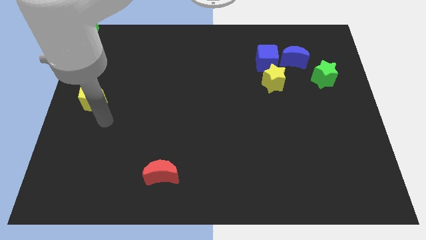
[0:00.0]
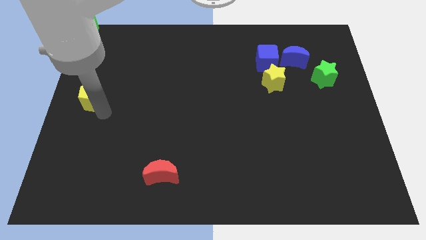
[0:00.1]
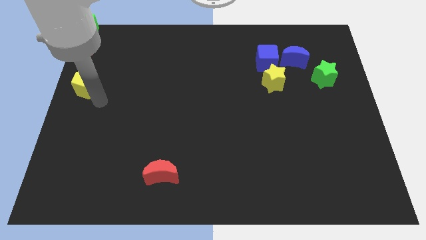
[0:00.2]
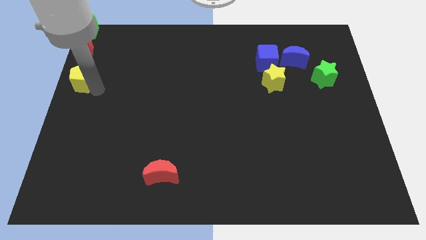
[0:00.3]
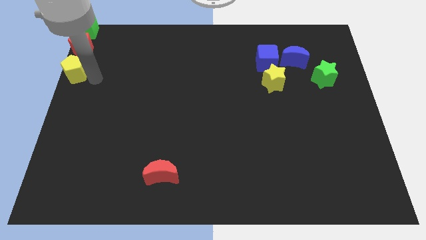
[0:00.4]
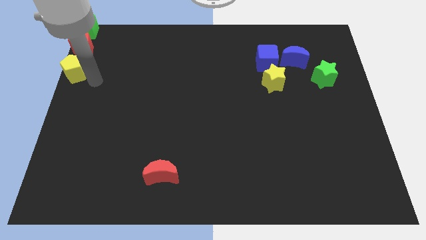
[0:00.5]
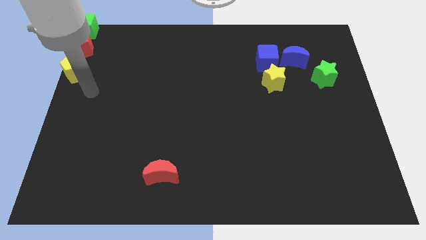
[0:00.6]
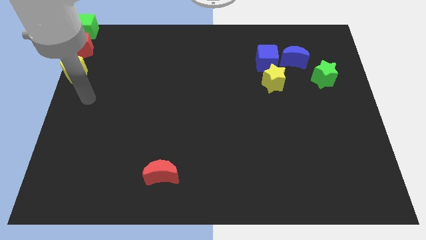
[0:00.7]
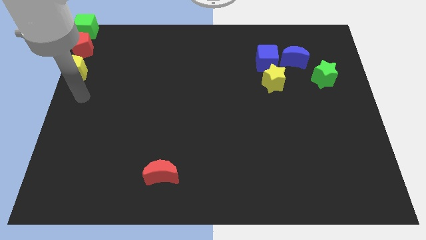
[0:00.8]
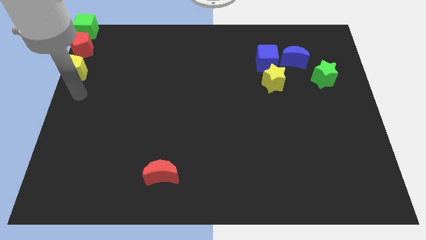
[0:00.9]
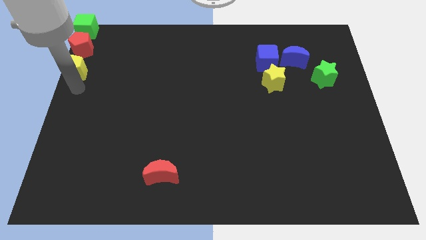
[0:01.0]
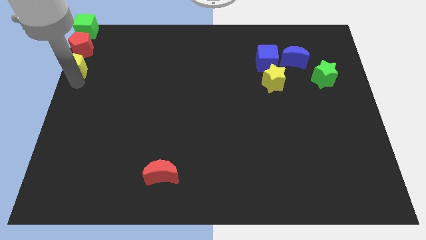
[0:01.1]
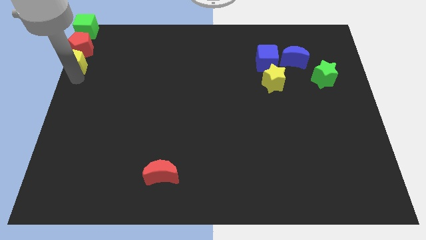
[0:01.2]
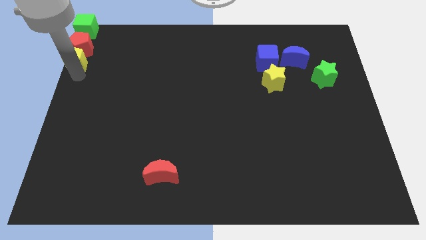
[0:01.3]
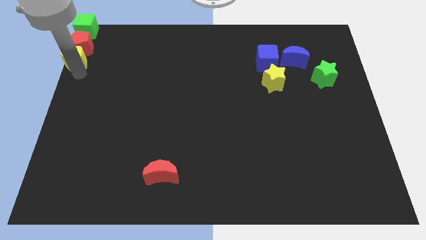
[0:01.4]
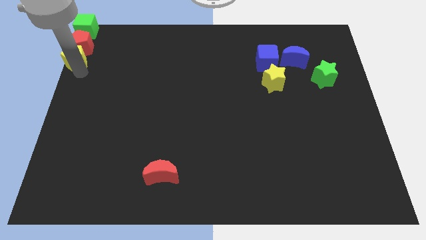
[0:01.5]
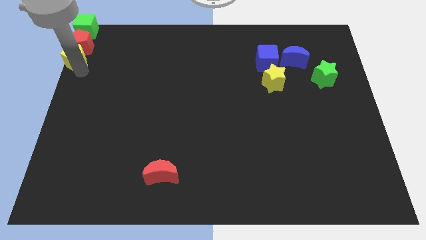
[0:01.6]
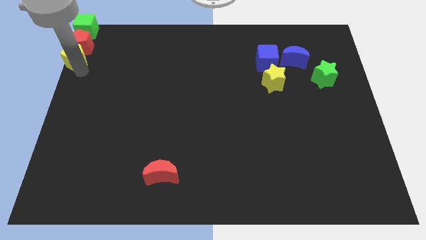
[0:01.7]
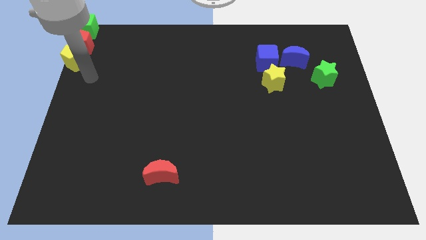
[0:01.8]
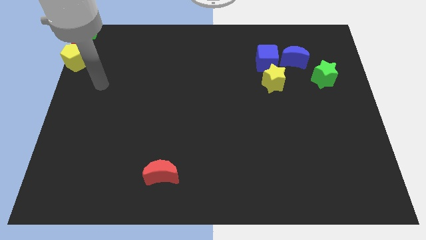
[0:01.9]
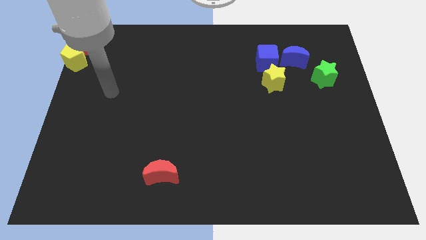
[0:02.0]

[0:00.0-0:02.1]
move yellow pentagon into red pentagon

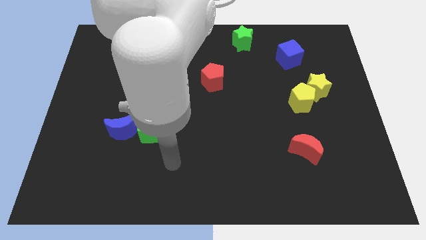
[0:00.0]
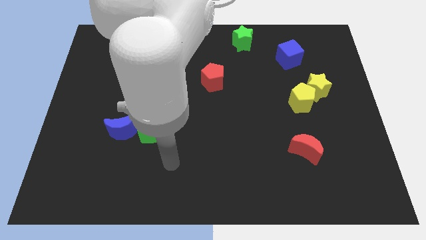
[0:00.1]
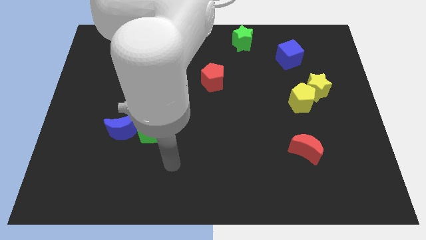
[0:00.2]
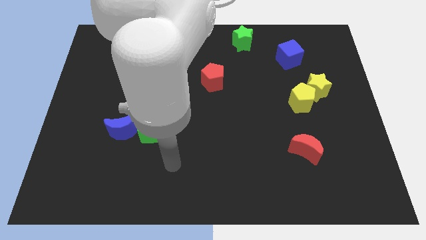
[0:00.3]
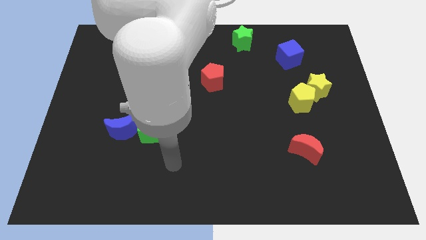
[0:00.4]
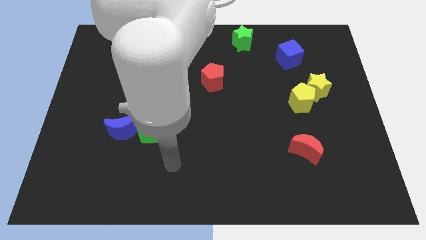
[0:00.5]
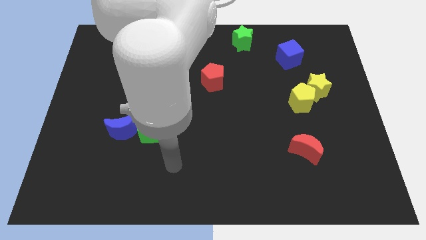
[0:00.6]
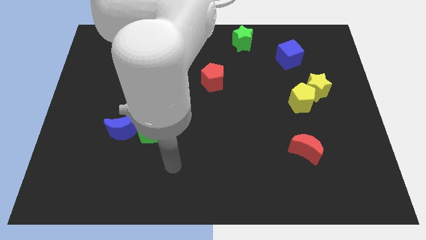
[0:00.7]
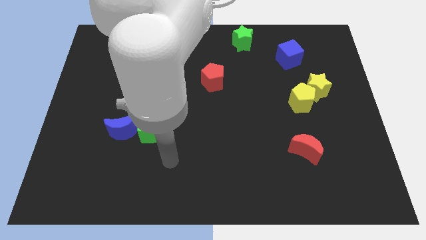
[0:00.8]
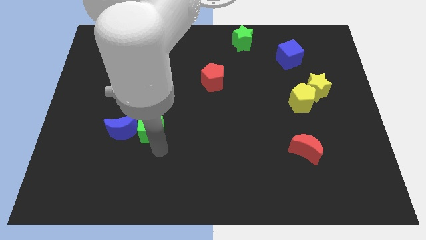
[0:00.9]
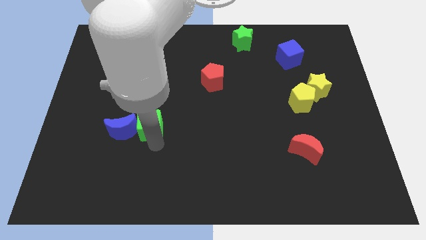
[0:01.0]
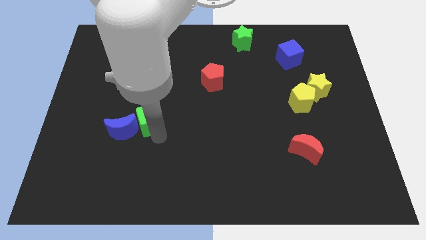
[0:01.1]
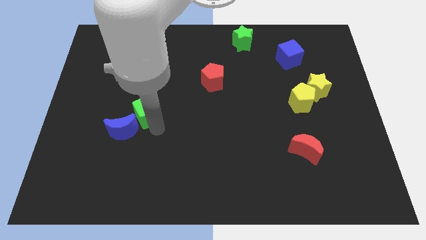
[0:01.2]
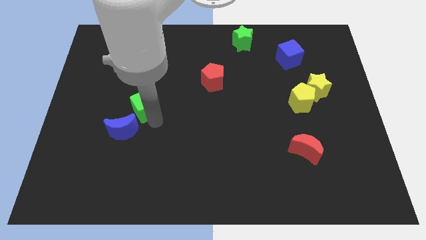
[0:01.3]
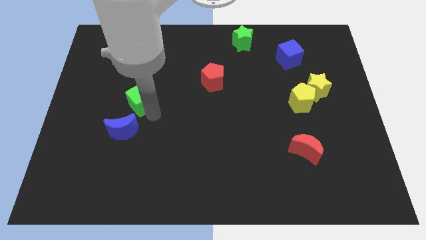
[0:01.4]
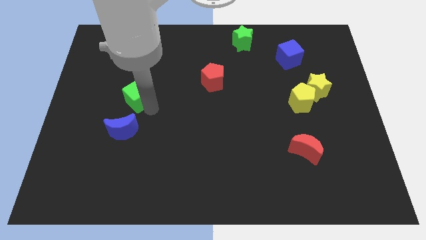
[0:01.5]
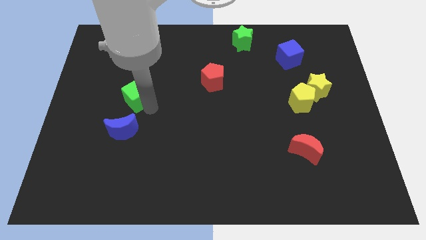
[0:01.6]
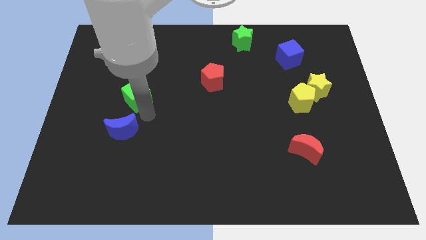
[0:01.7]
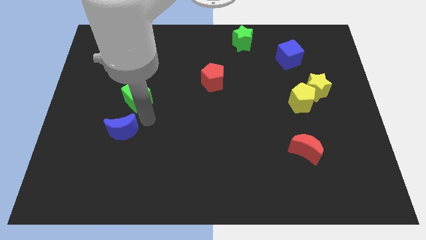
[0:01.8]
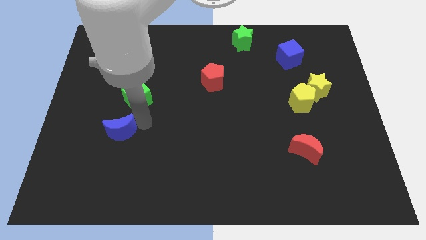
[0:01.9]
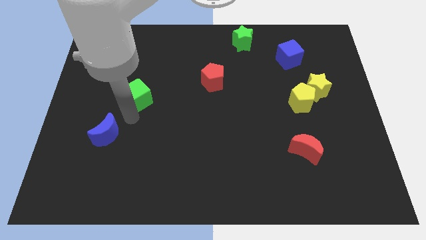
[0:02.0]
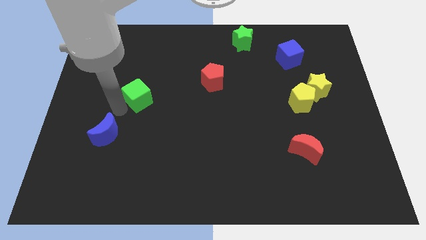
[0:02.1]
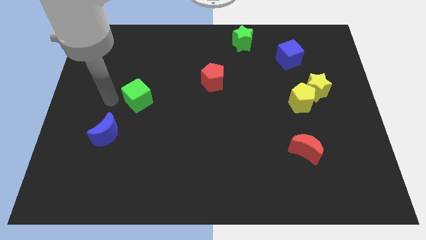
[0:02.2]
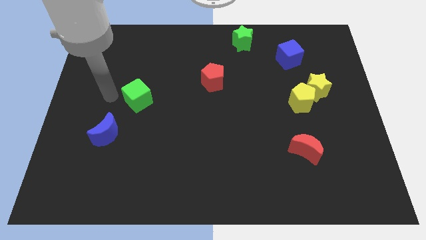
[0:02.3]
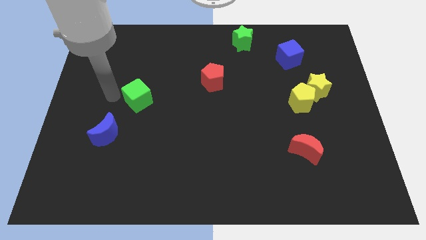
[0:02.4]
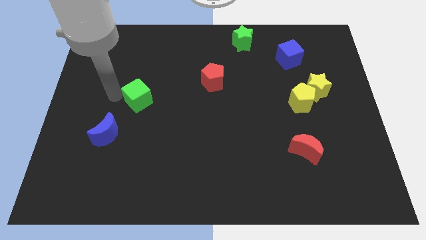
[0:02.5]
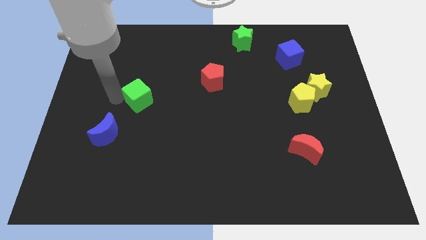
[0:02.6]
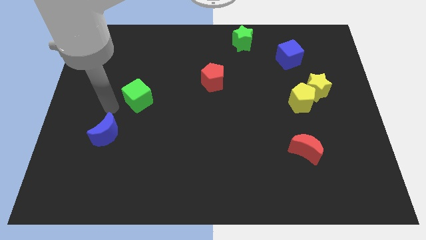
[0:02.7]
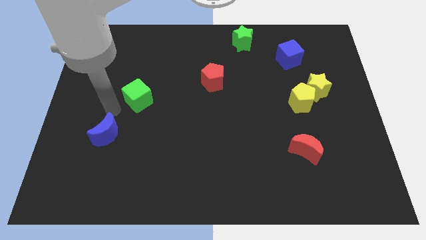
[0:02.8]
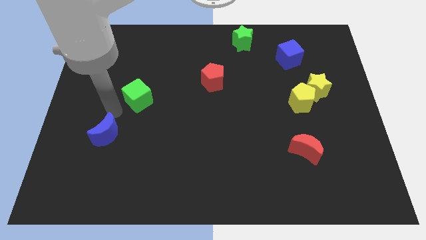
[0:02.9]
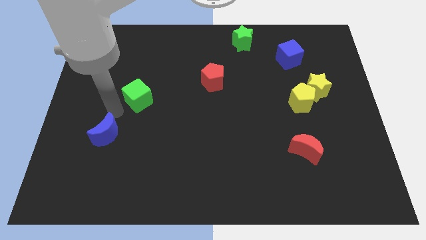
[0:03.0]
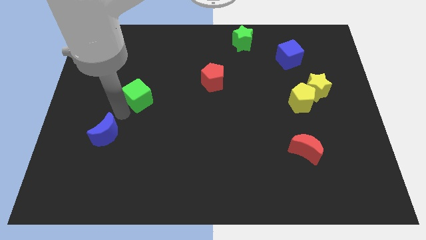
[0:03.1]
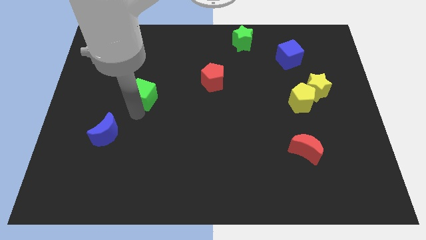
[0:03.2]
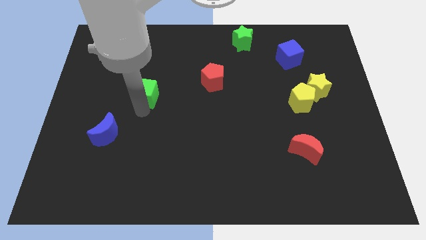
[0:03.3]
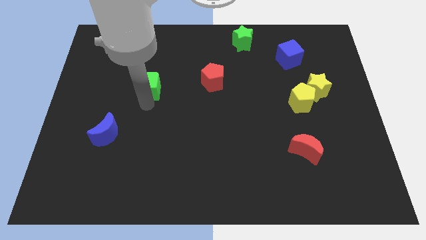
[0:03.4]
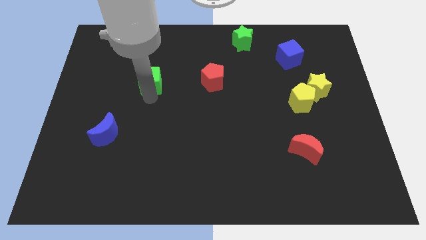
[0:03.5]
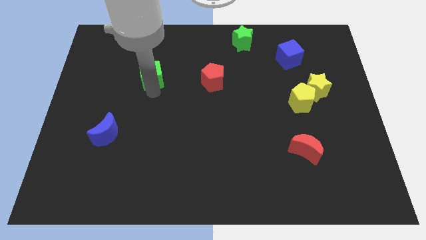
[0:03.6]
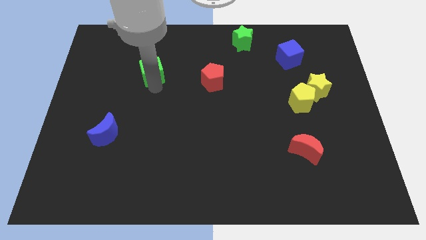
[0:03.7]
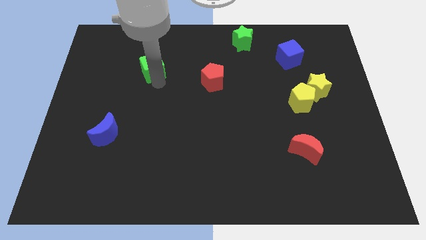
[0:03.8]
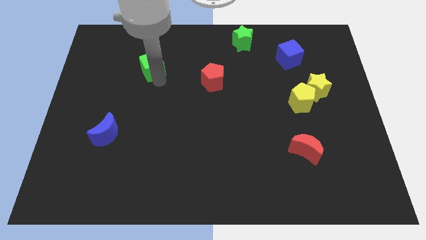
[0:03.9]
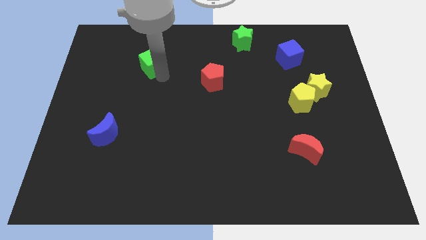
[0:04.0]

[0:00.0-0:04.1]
separate green cube from blue moon

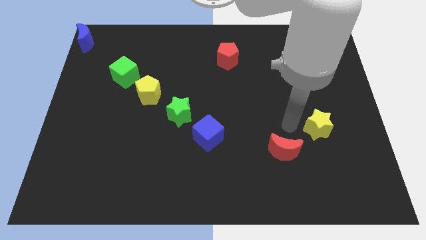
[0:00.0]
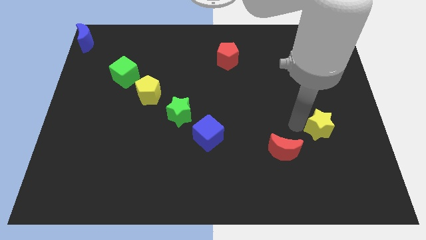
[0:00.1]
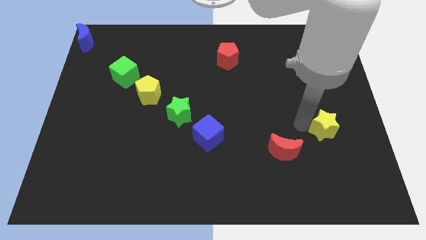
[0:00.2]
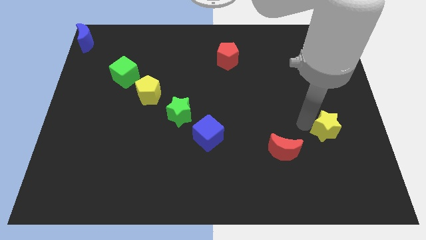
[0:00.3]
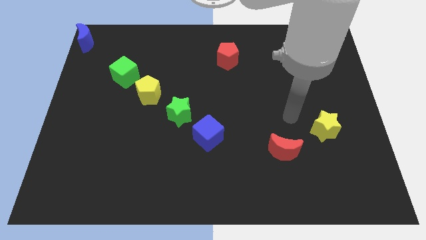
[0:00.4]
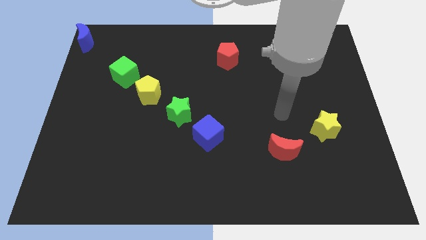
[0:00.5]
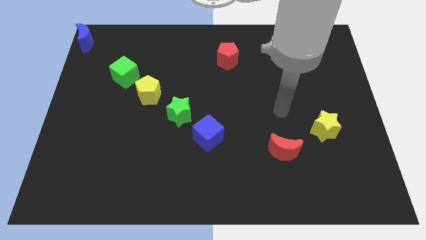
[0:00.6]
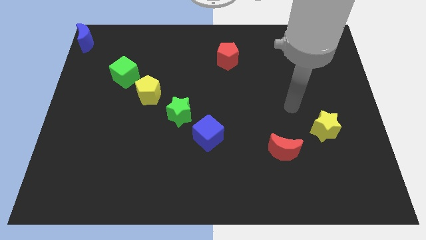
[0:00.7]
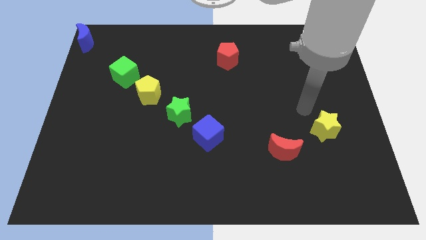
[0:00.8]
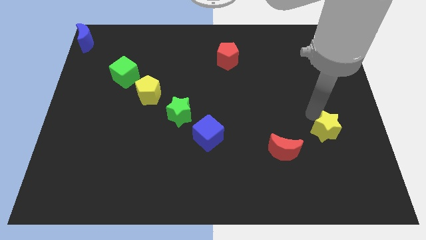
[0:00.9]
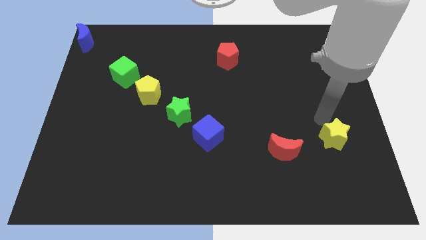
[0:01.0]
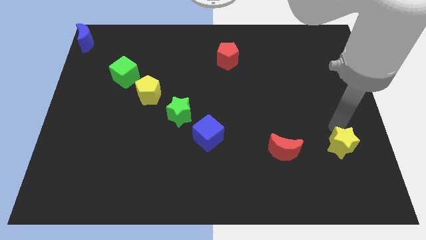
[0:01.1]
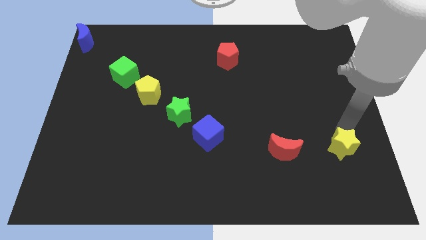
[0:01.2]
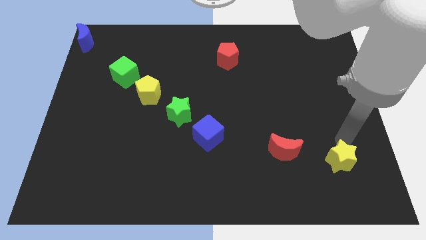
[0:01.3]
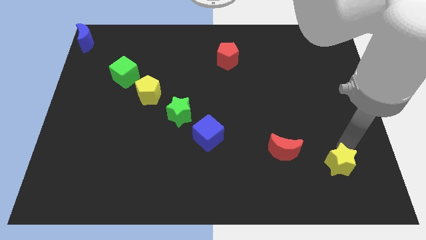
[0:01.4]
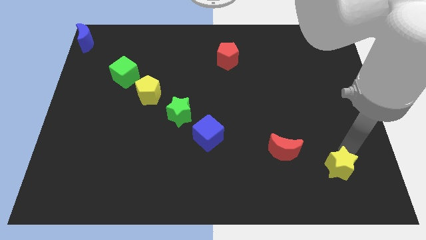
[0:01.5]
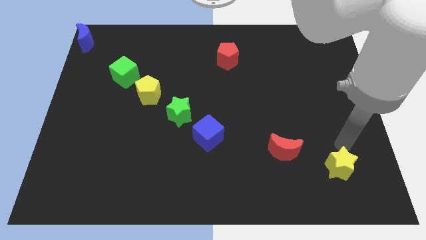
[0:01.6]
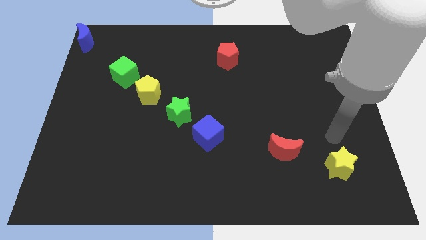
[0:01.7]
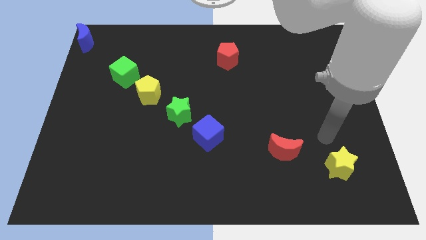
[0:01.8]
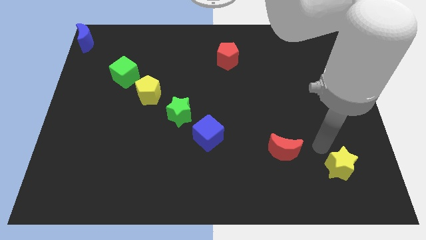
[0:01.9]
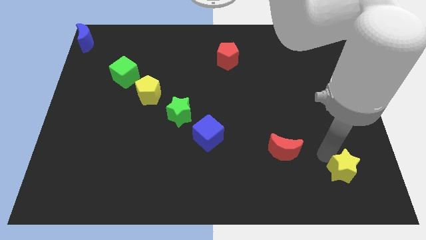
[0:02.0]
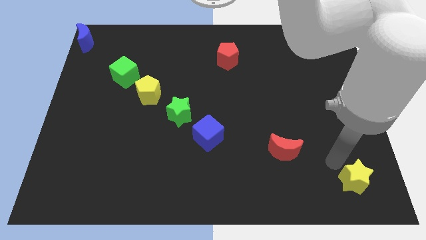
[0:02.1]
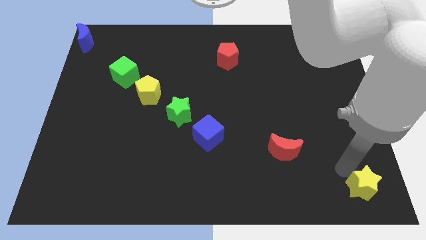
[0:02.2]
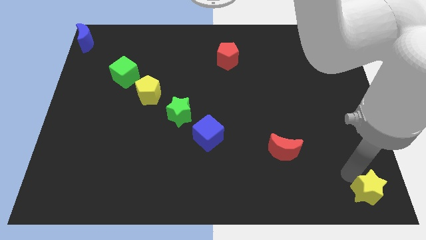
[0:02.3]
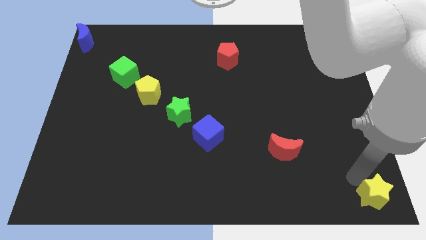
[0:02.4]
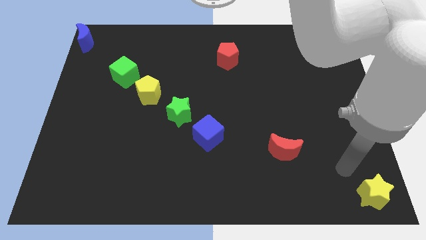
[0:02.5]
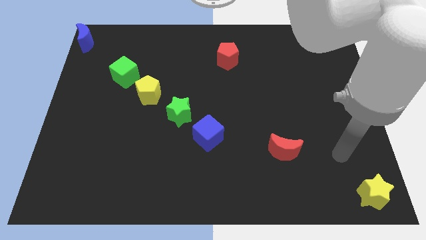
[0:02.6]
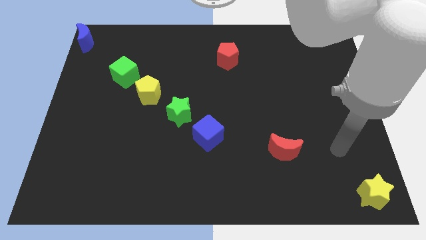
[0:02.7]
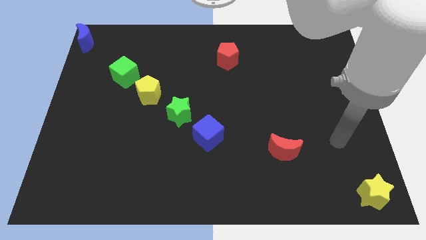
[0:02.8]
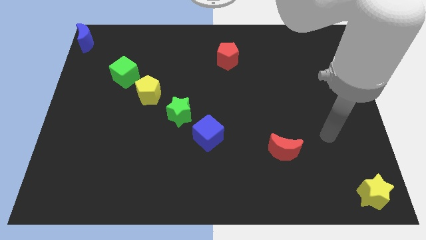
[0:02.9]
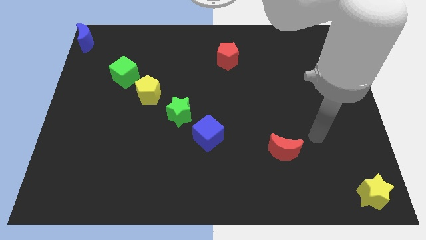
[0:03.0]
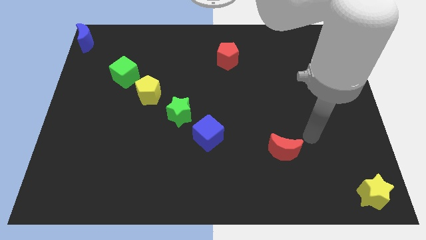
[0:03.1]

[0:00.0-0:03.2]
move the yellow star towards the bottom right corner of the board
